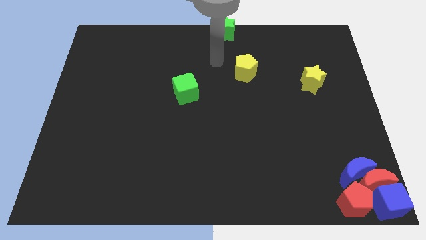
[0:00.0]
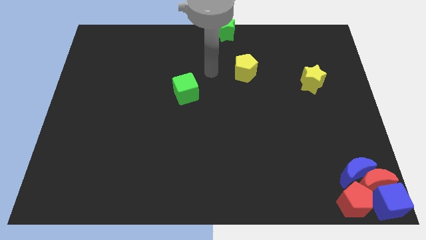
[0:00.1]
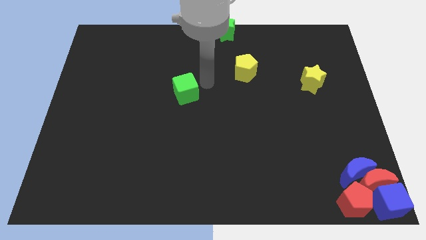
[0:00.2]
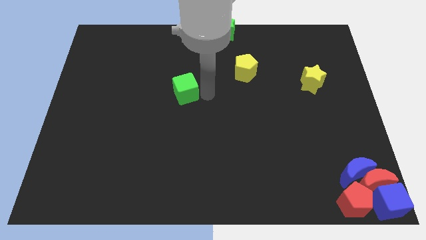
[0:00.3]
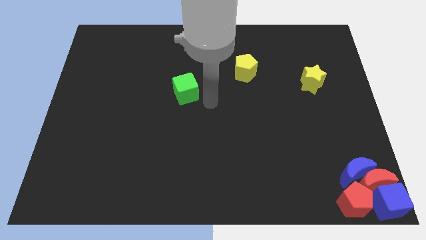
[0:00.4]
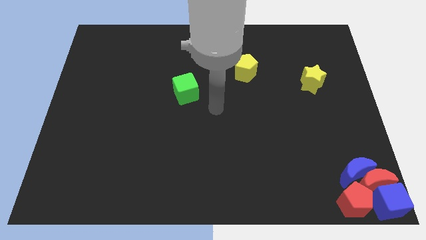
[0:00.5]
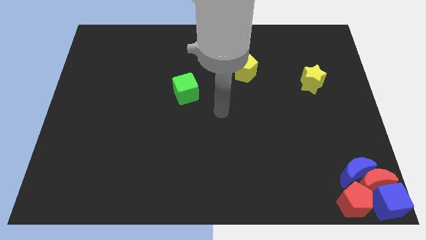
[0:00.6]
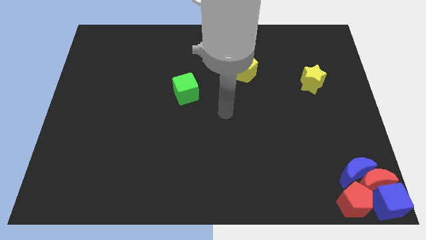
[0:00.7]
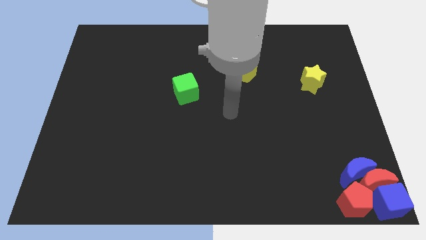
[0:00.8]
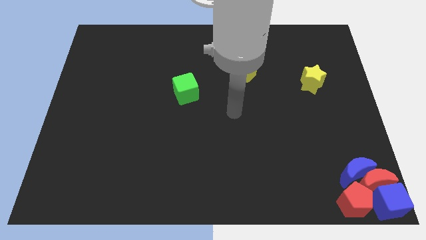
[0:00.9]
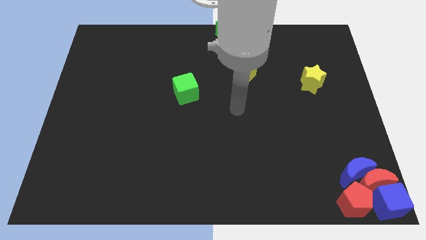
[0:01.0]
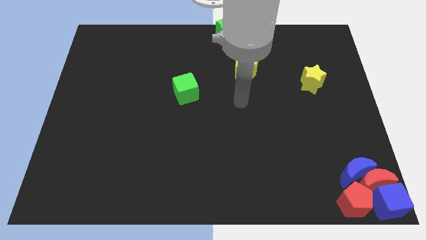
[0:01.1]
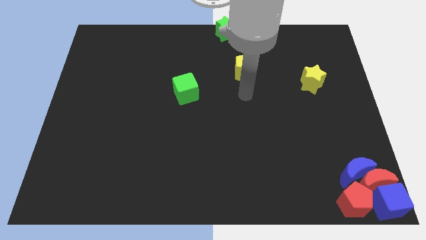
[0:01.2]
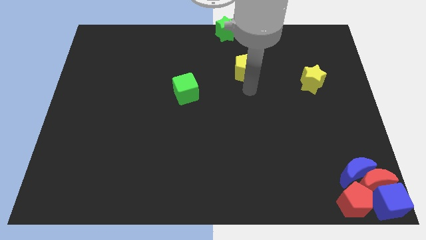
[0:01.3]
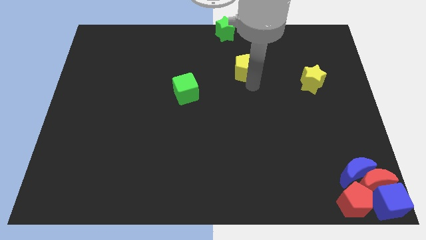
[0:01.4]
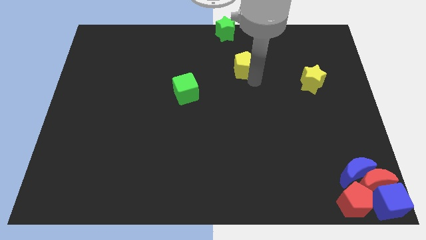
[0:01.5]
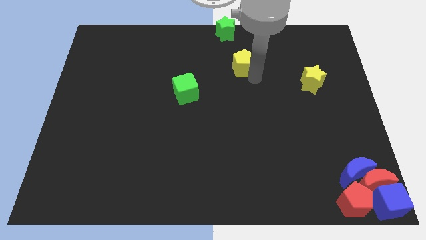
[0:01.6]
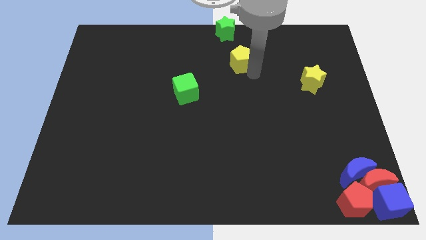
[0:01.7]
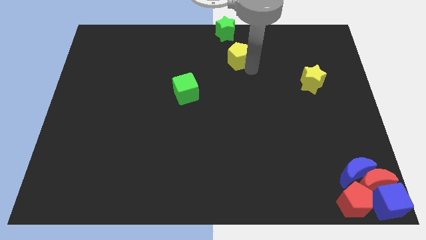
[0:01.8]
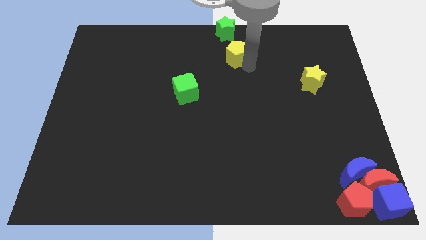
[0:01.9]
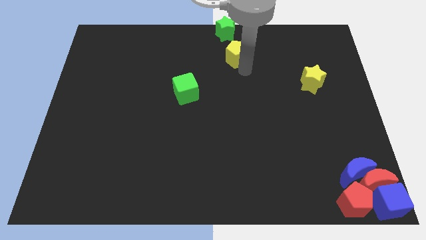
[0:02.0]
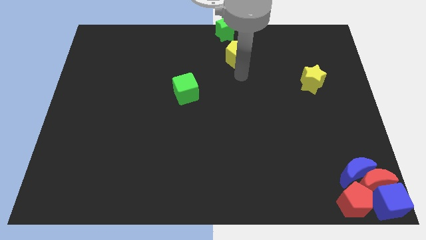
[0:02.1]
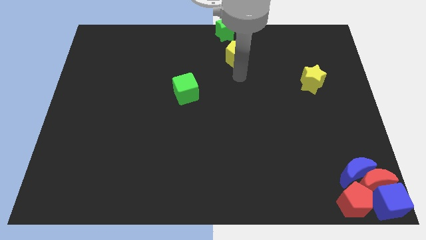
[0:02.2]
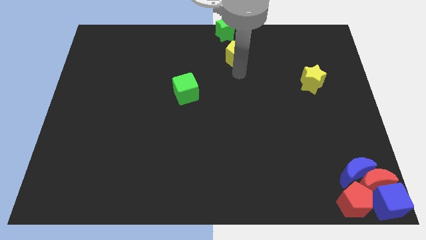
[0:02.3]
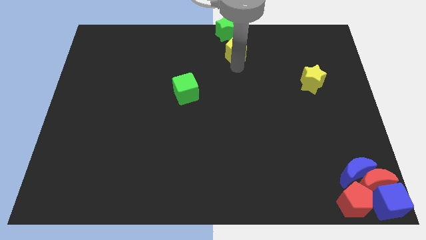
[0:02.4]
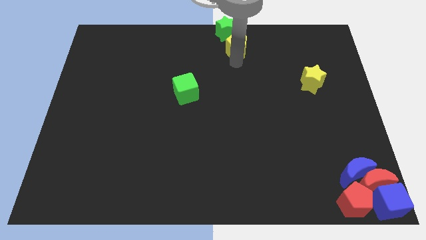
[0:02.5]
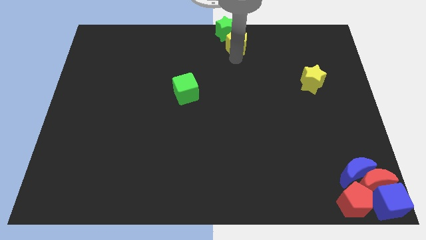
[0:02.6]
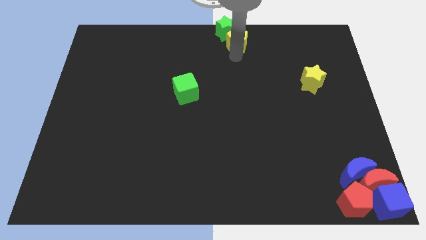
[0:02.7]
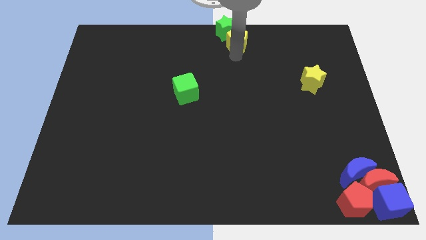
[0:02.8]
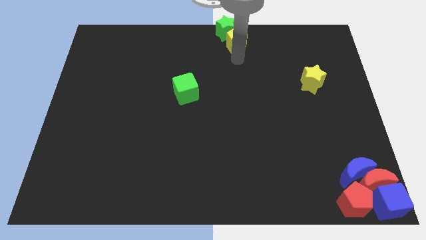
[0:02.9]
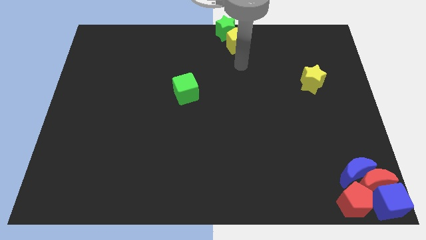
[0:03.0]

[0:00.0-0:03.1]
push the yellow pentagon to the bottom of the green star

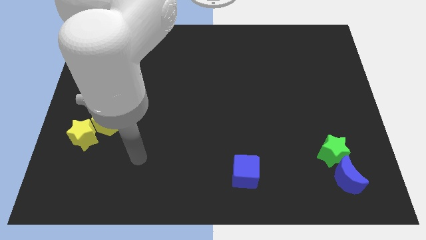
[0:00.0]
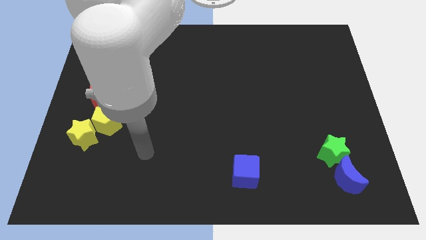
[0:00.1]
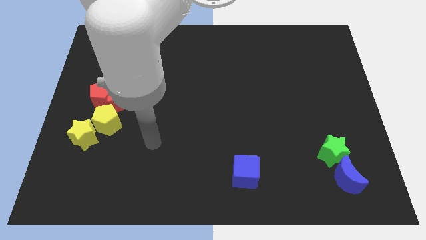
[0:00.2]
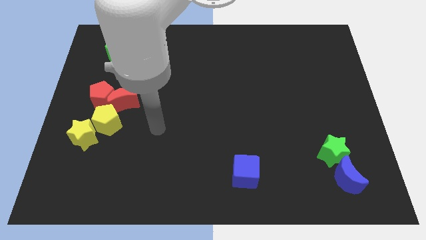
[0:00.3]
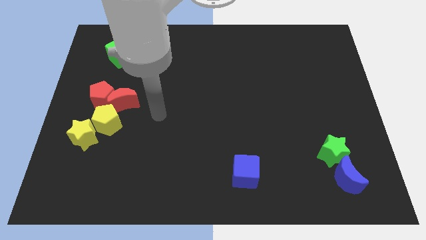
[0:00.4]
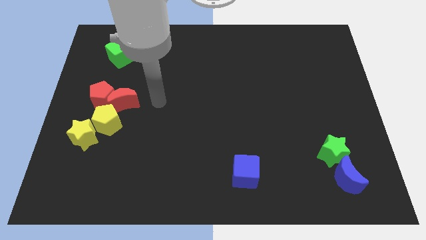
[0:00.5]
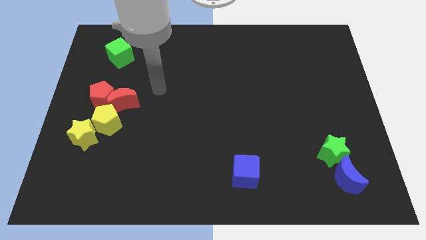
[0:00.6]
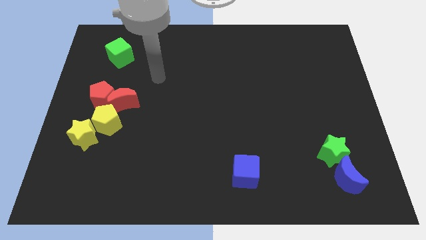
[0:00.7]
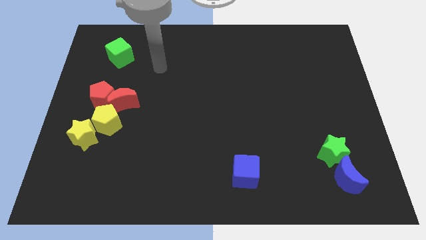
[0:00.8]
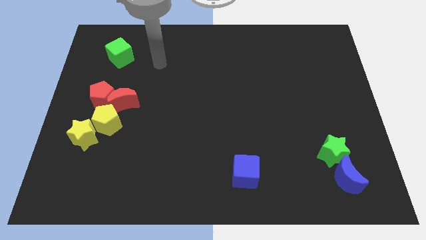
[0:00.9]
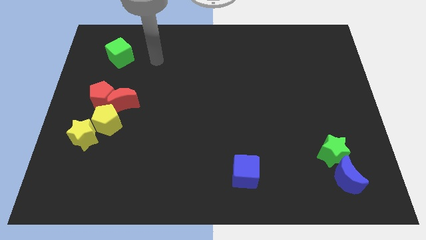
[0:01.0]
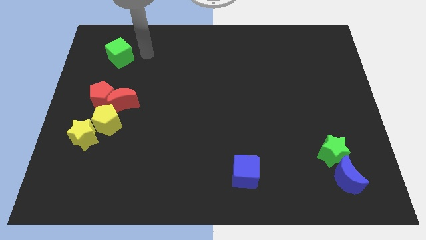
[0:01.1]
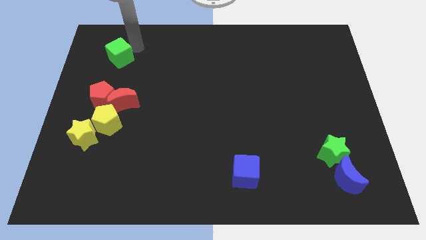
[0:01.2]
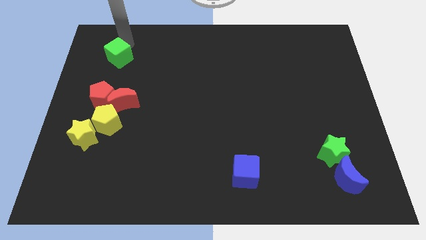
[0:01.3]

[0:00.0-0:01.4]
point your arm at the right side of the green cube

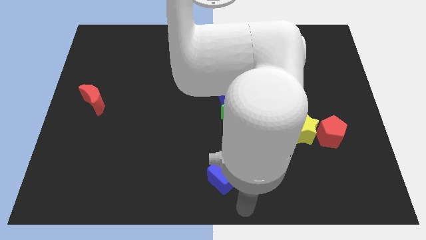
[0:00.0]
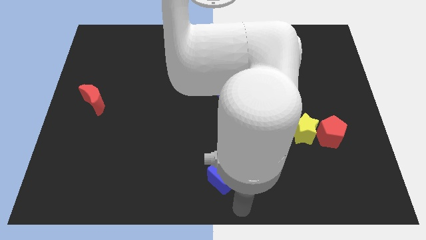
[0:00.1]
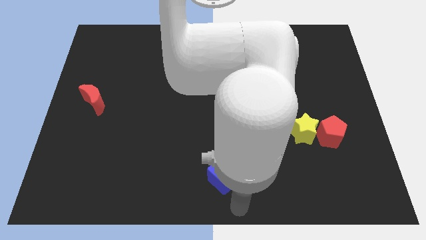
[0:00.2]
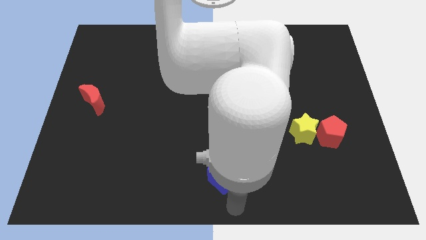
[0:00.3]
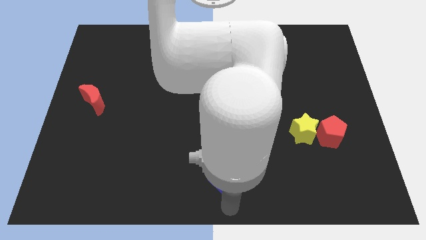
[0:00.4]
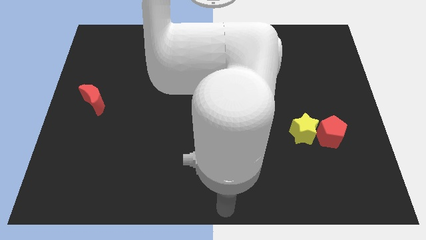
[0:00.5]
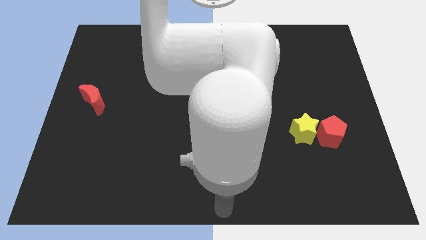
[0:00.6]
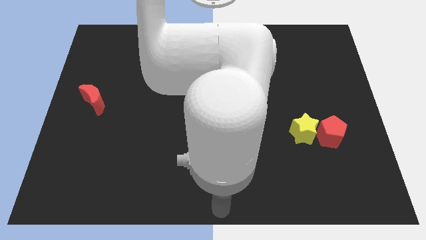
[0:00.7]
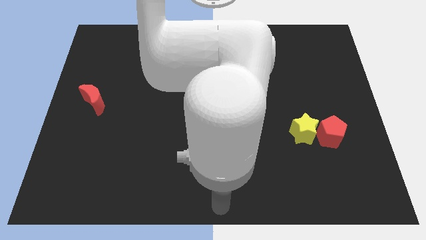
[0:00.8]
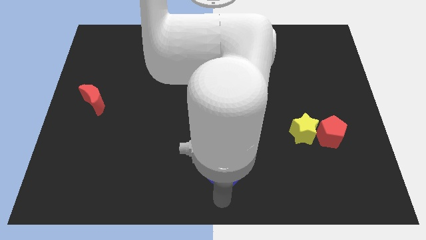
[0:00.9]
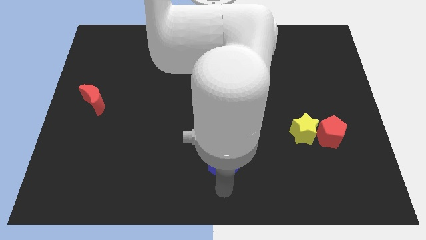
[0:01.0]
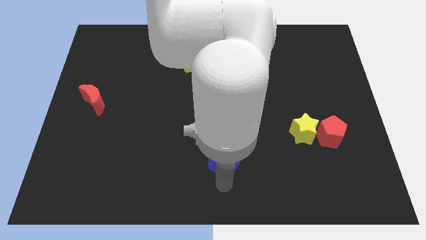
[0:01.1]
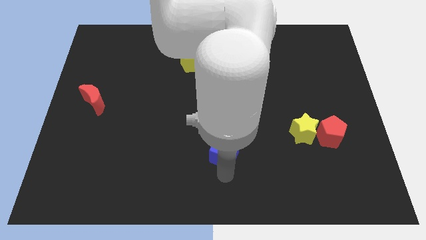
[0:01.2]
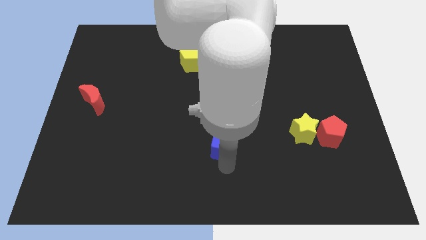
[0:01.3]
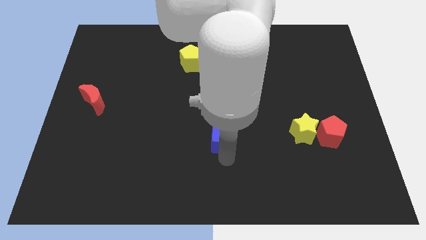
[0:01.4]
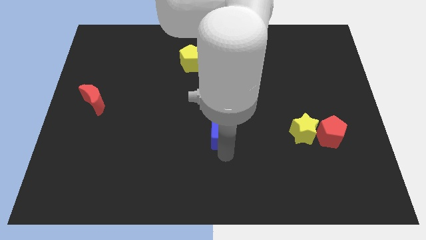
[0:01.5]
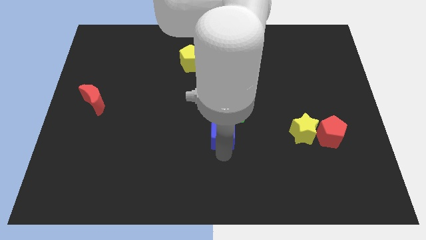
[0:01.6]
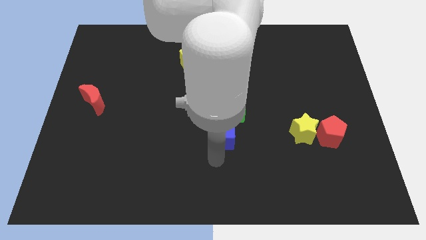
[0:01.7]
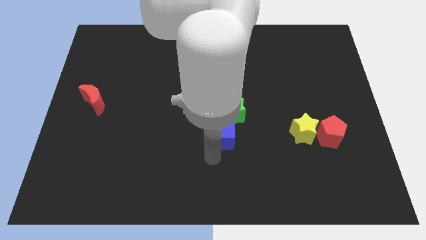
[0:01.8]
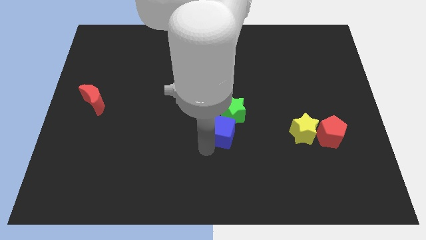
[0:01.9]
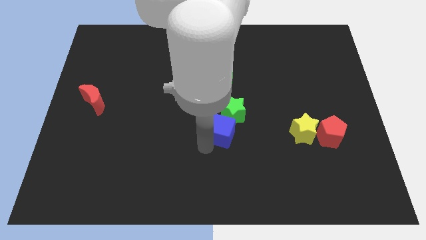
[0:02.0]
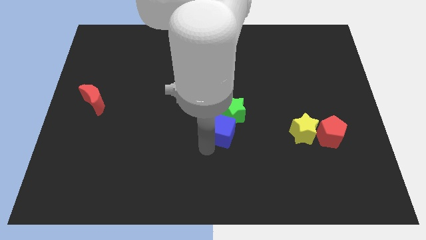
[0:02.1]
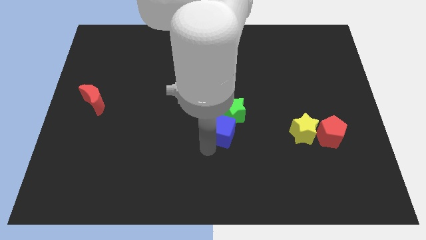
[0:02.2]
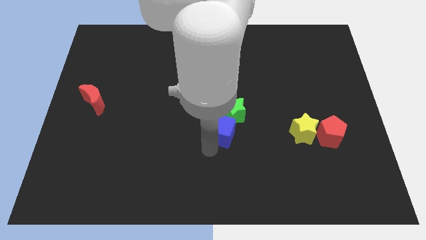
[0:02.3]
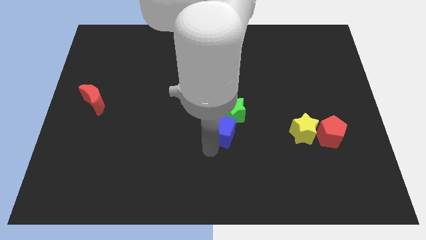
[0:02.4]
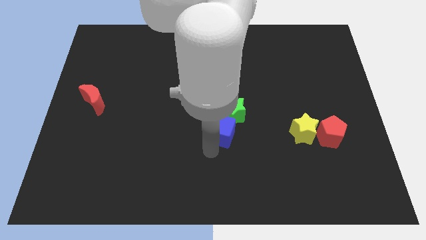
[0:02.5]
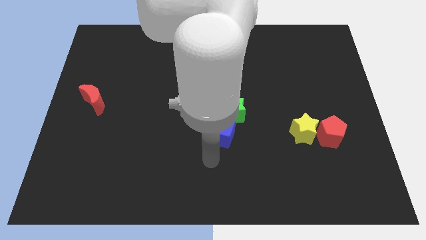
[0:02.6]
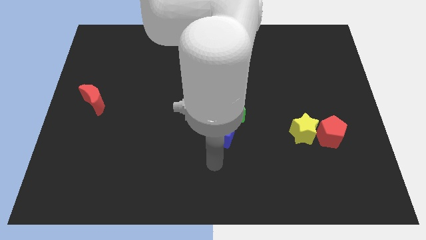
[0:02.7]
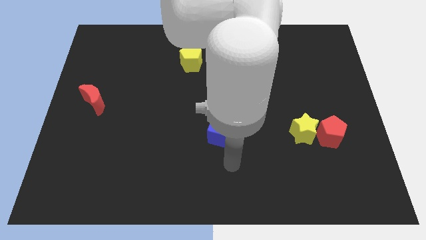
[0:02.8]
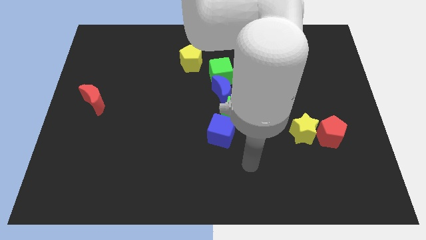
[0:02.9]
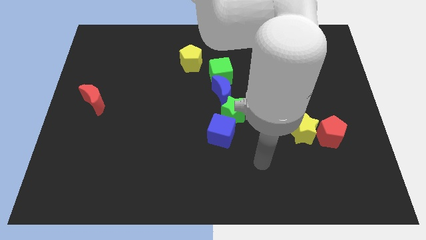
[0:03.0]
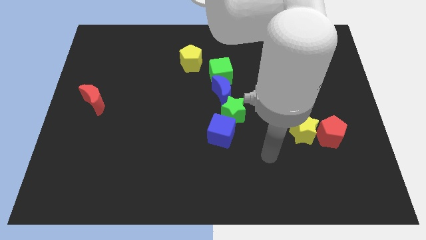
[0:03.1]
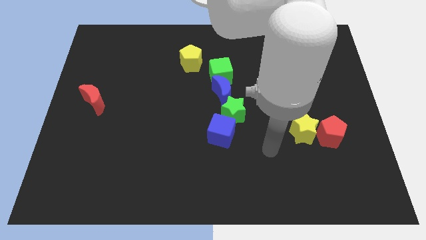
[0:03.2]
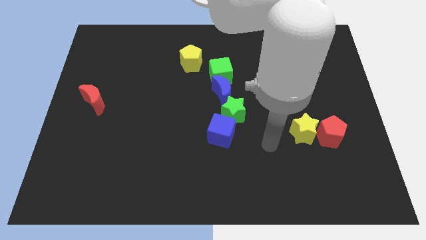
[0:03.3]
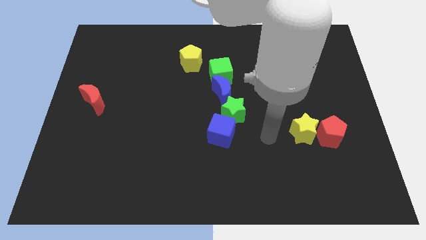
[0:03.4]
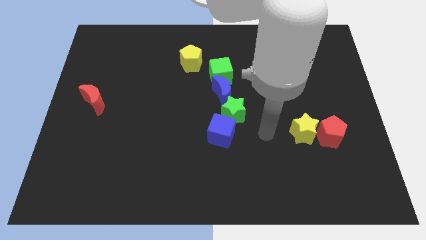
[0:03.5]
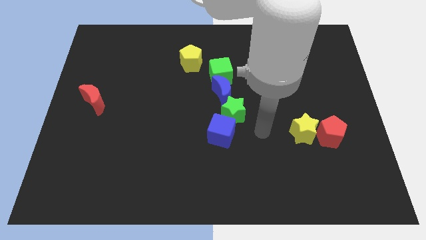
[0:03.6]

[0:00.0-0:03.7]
push blue cube down to the green star

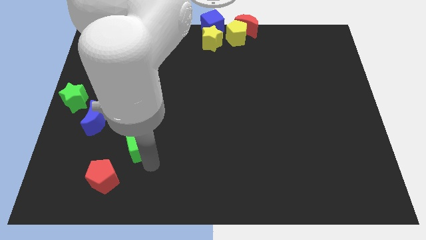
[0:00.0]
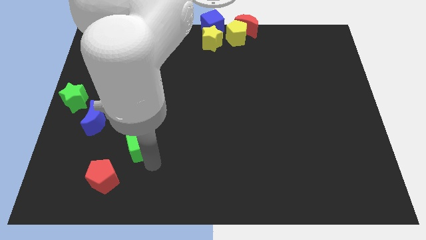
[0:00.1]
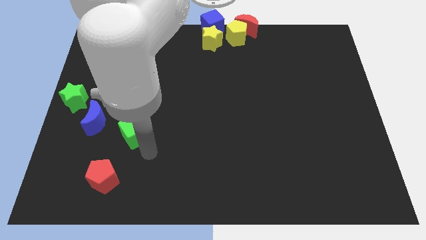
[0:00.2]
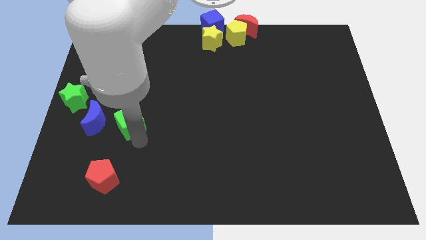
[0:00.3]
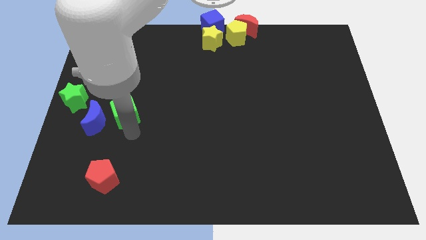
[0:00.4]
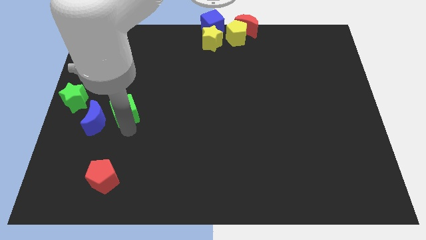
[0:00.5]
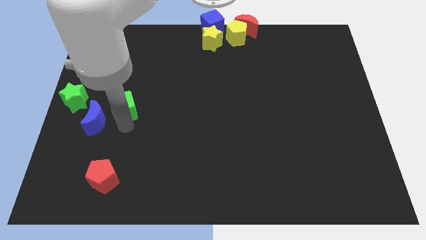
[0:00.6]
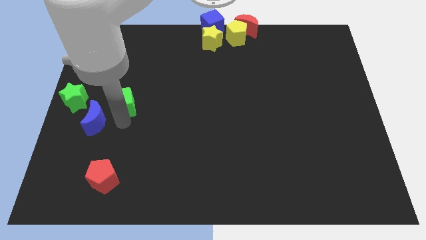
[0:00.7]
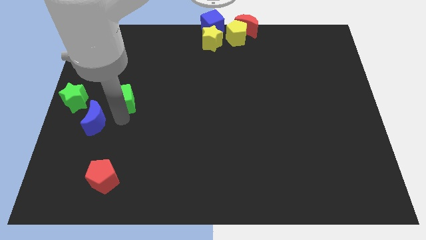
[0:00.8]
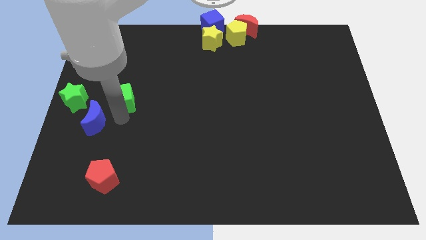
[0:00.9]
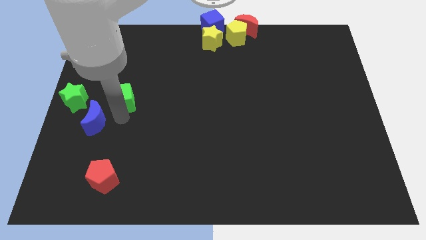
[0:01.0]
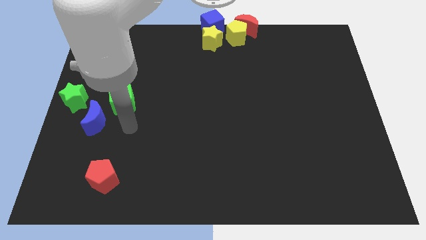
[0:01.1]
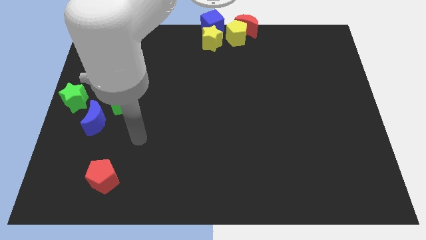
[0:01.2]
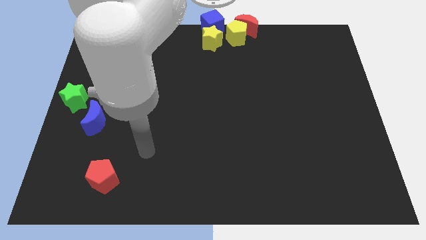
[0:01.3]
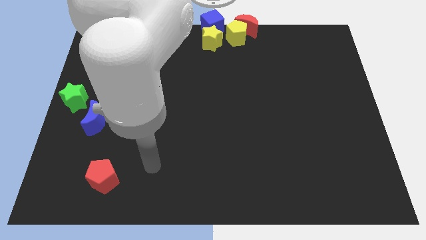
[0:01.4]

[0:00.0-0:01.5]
move the green cube to the right side of the green star
